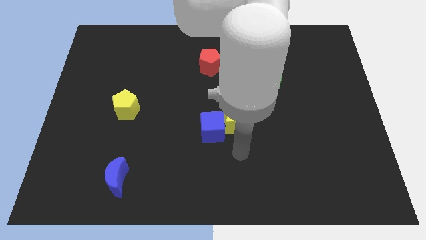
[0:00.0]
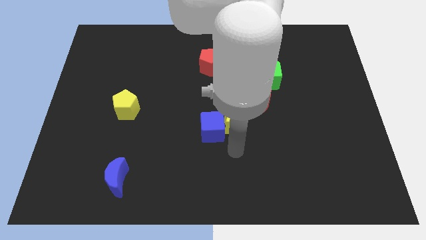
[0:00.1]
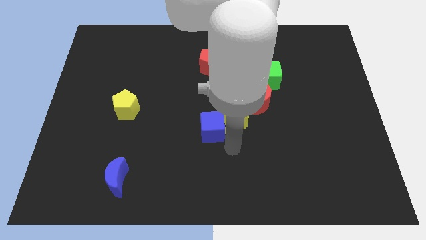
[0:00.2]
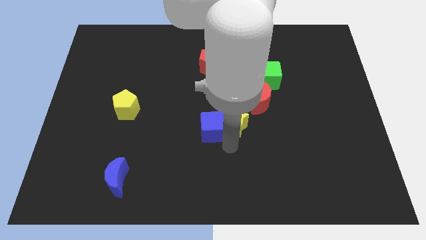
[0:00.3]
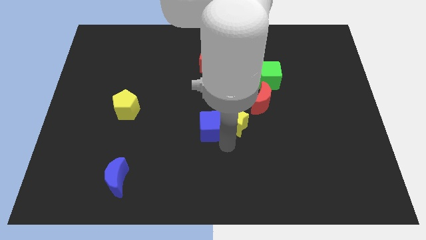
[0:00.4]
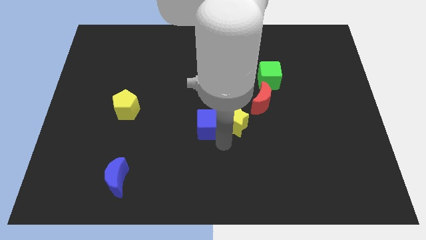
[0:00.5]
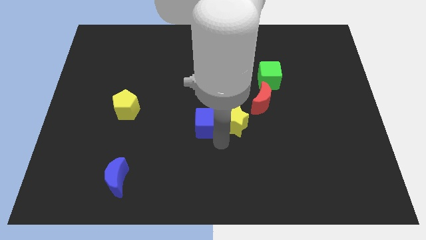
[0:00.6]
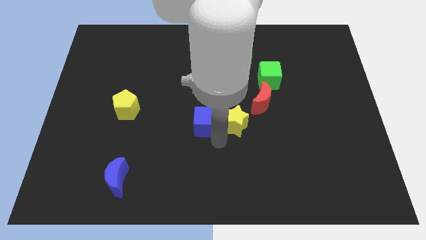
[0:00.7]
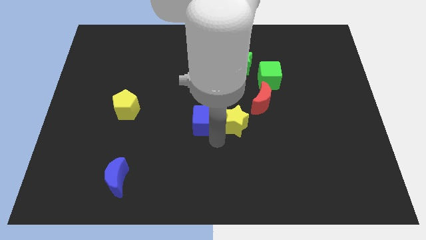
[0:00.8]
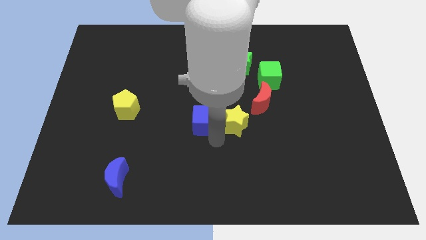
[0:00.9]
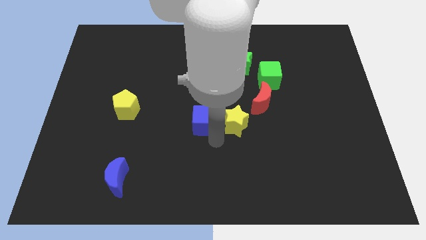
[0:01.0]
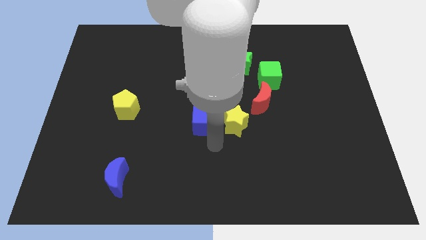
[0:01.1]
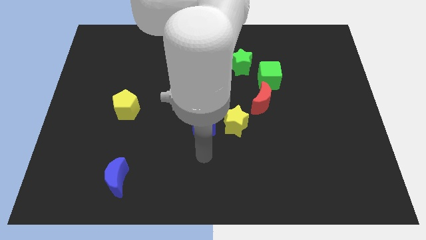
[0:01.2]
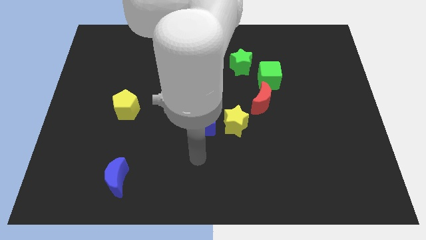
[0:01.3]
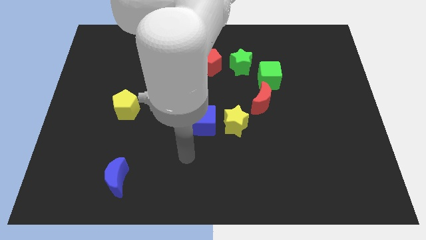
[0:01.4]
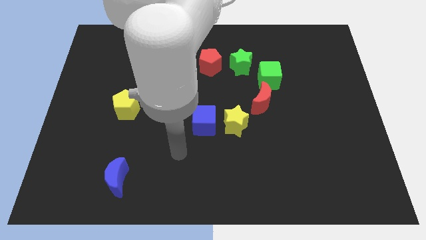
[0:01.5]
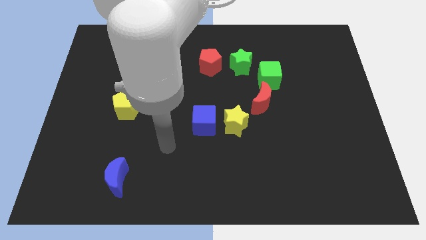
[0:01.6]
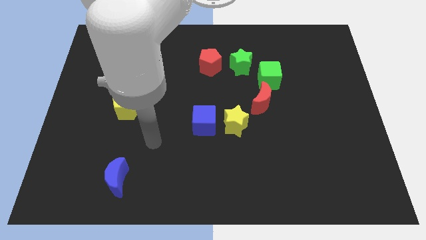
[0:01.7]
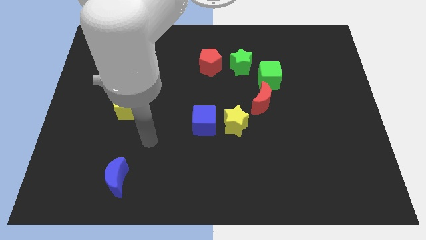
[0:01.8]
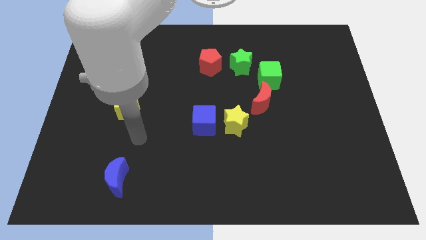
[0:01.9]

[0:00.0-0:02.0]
separate the blue cube and yellow star

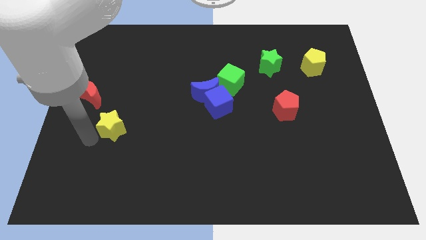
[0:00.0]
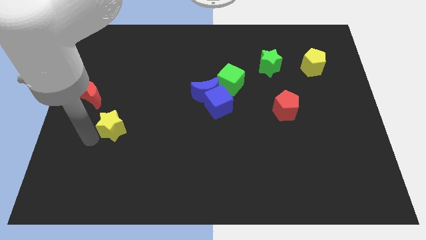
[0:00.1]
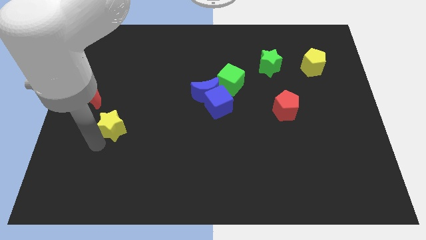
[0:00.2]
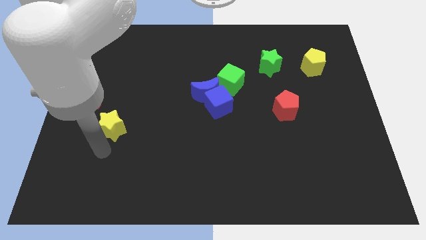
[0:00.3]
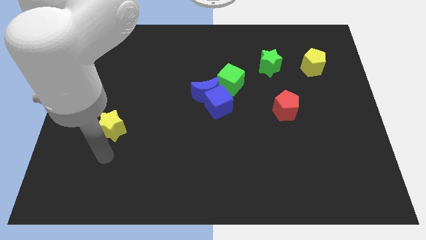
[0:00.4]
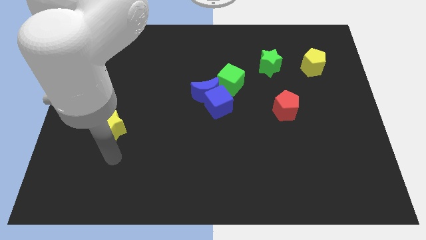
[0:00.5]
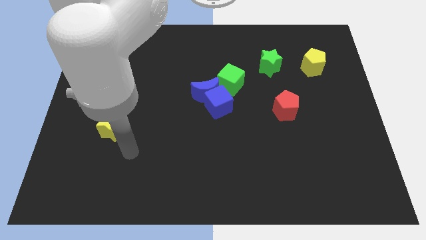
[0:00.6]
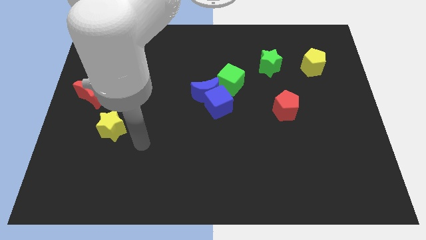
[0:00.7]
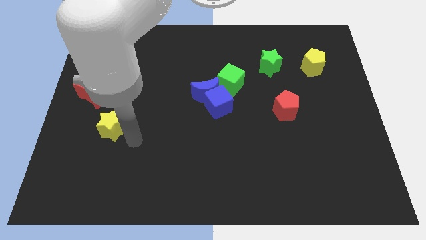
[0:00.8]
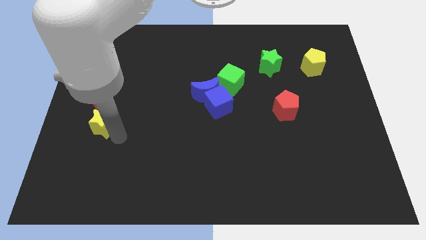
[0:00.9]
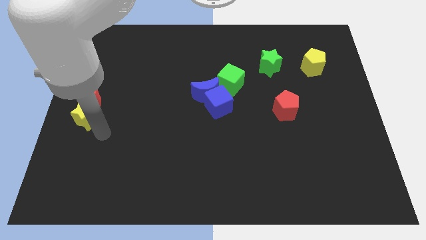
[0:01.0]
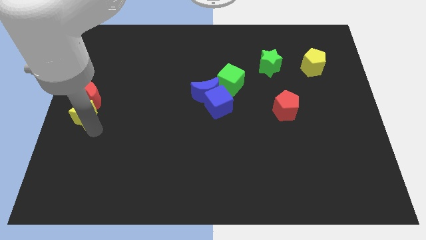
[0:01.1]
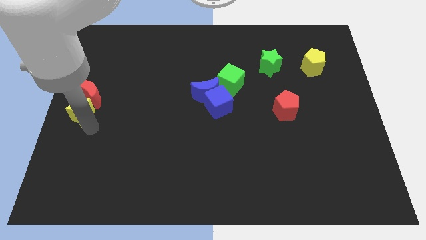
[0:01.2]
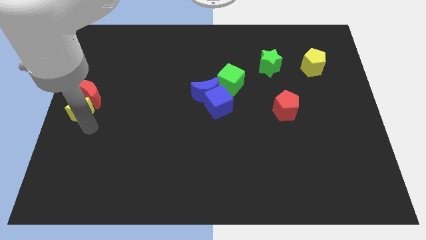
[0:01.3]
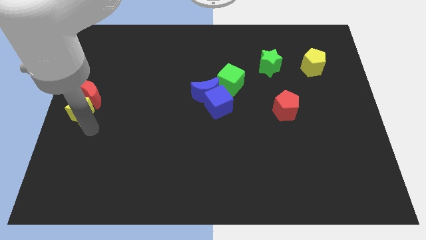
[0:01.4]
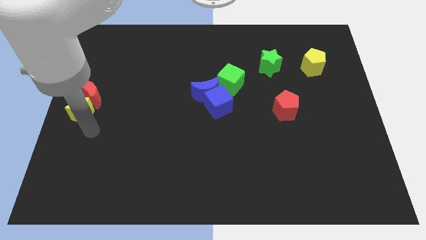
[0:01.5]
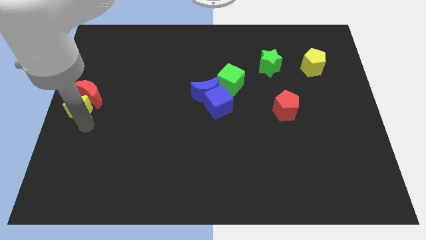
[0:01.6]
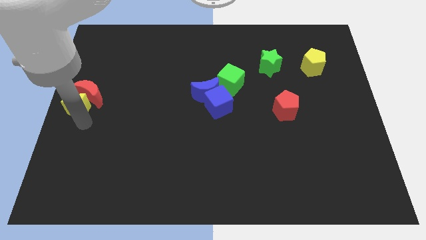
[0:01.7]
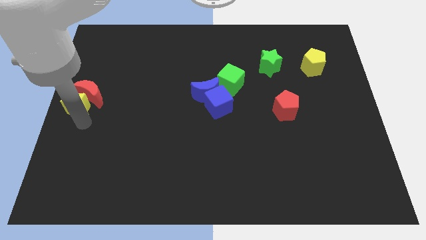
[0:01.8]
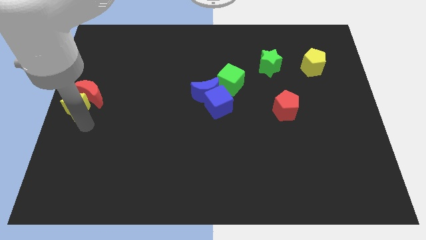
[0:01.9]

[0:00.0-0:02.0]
push the yellow star into red crescent

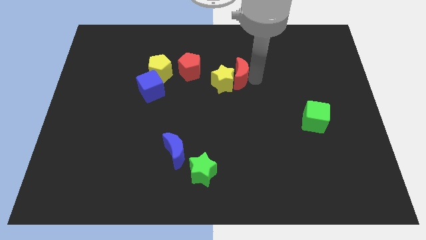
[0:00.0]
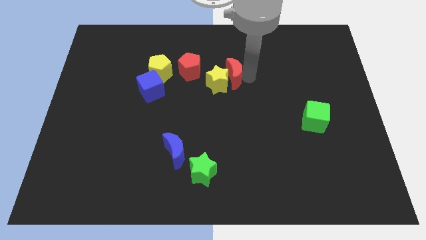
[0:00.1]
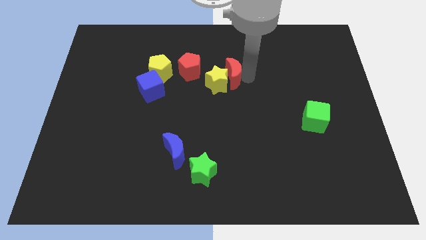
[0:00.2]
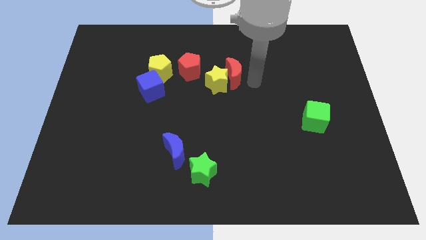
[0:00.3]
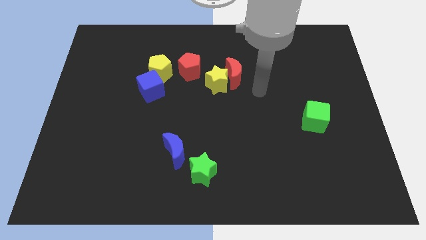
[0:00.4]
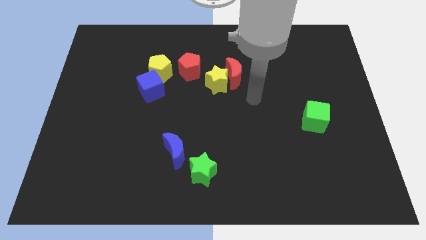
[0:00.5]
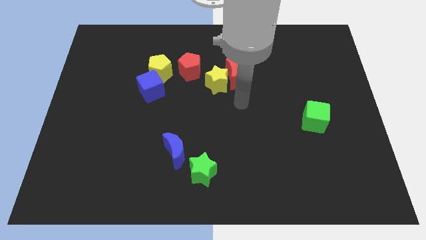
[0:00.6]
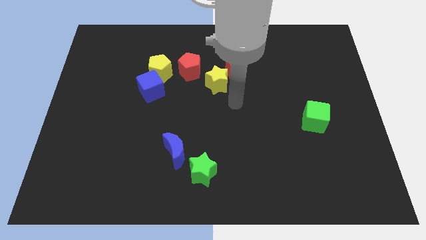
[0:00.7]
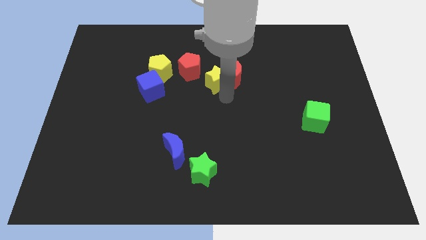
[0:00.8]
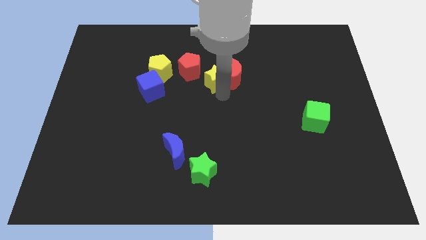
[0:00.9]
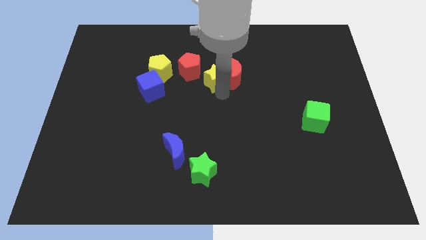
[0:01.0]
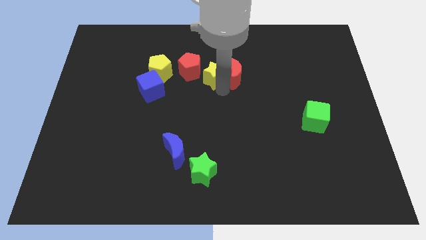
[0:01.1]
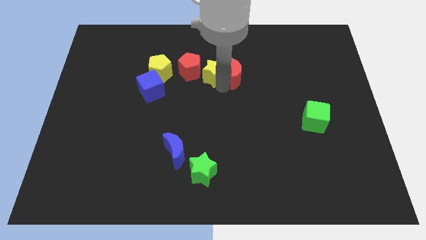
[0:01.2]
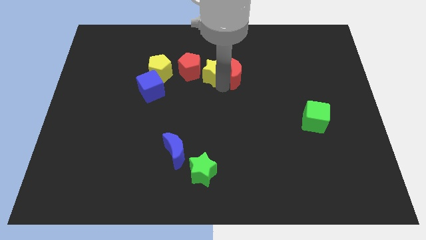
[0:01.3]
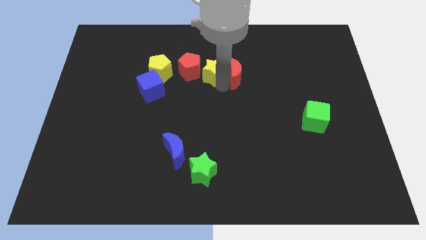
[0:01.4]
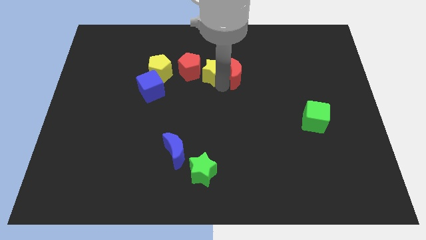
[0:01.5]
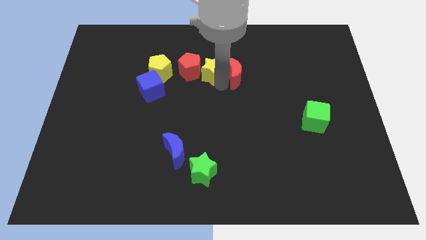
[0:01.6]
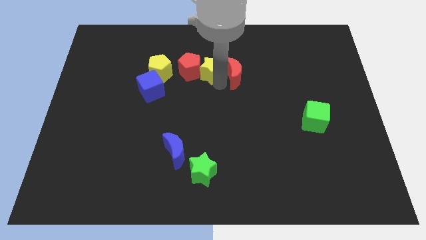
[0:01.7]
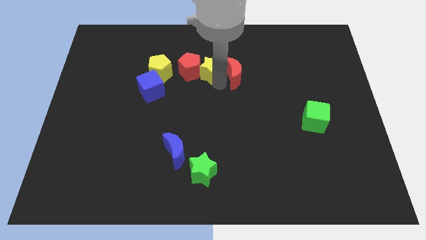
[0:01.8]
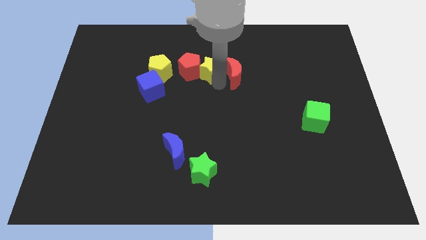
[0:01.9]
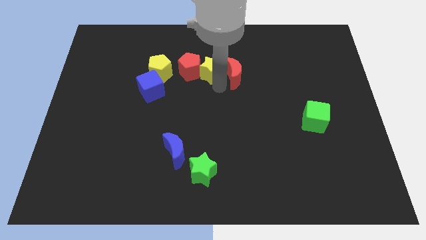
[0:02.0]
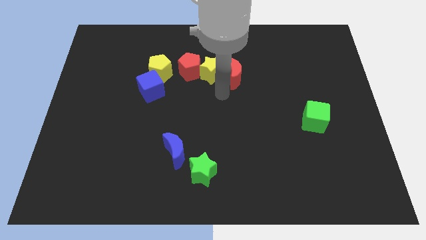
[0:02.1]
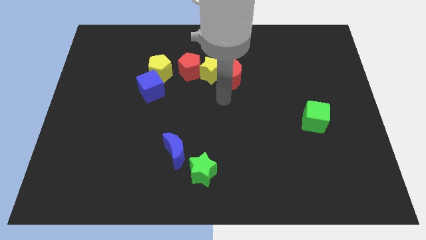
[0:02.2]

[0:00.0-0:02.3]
move the yellow star into the red pentagon

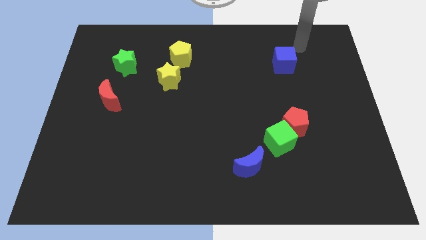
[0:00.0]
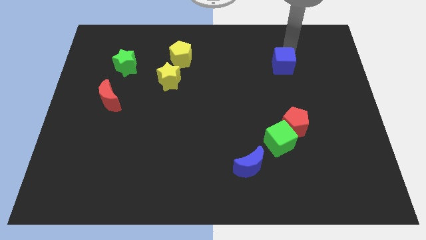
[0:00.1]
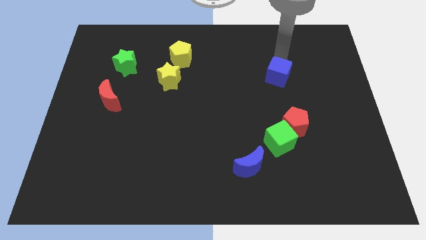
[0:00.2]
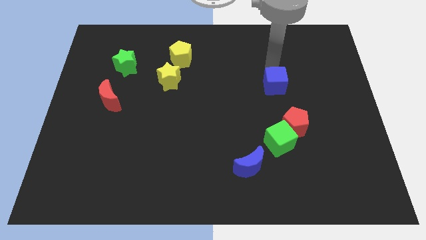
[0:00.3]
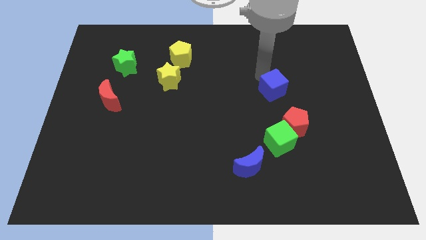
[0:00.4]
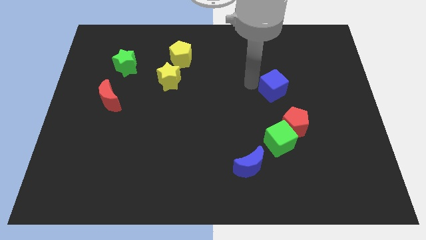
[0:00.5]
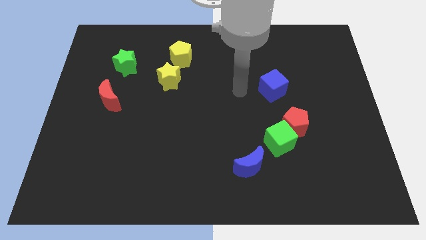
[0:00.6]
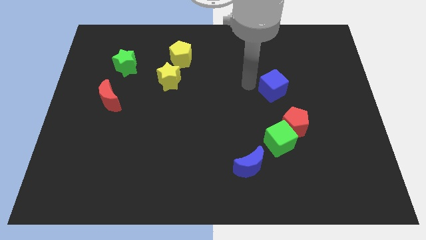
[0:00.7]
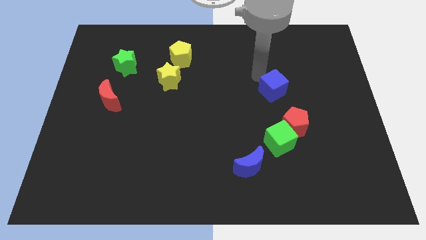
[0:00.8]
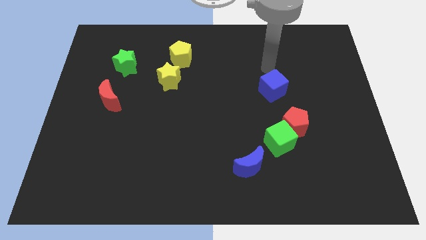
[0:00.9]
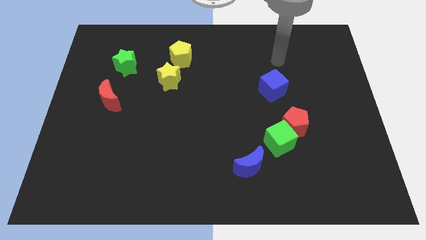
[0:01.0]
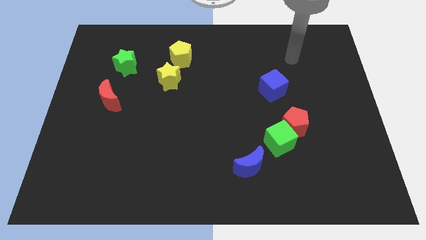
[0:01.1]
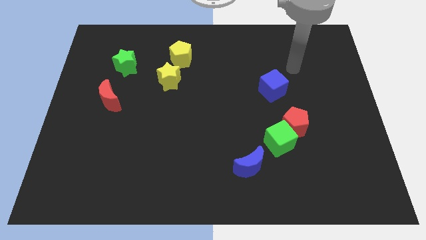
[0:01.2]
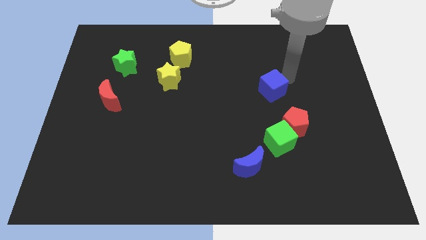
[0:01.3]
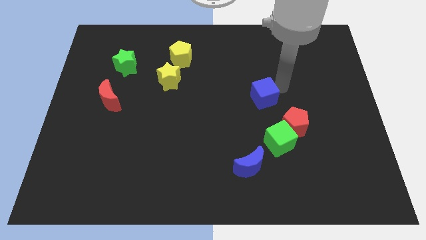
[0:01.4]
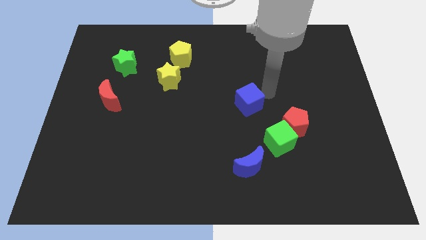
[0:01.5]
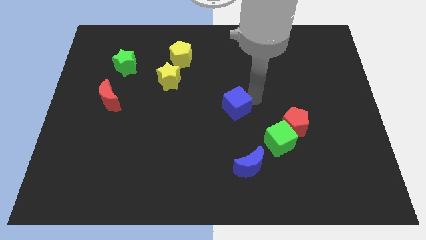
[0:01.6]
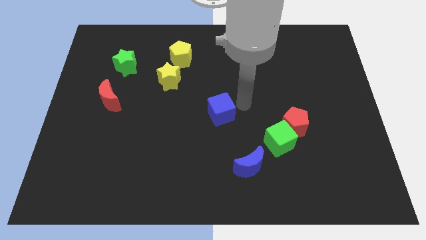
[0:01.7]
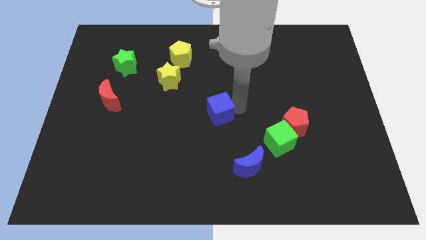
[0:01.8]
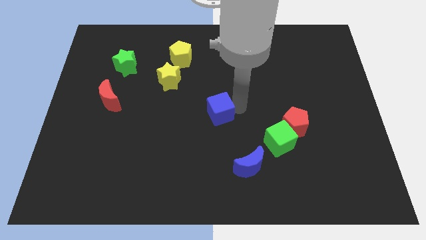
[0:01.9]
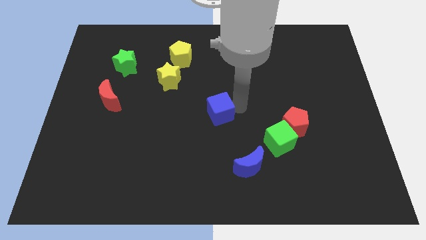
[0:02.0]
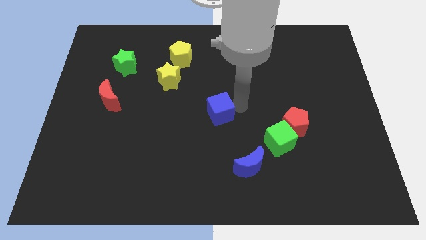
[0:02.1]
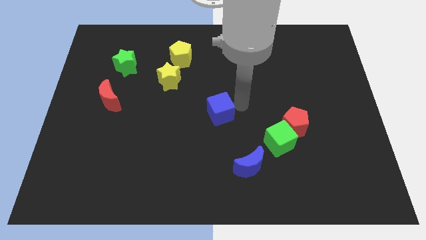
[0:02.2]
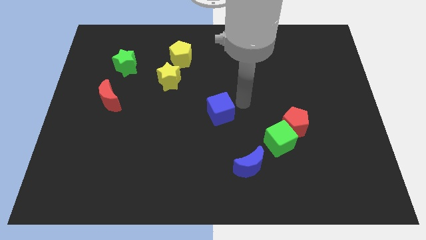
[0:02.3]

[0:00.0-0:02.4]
drag blue cube to the center of the board

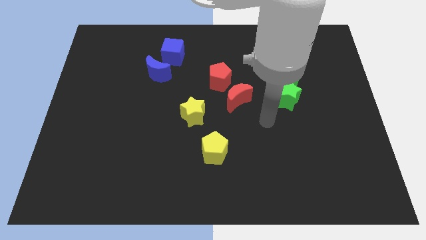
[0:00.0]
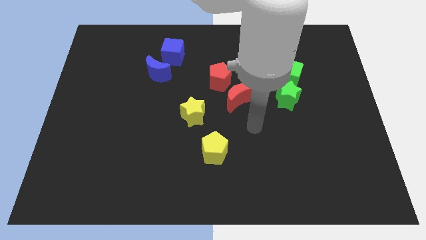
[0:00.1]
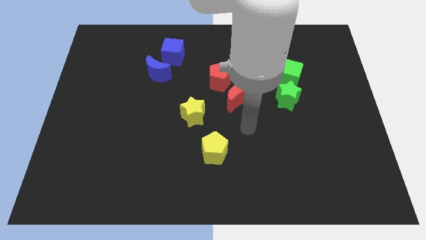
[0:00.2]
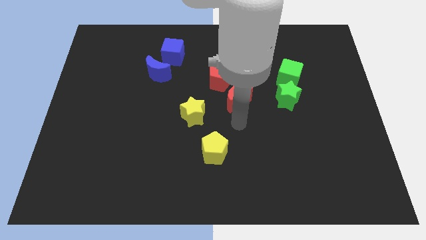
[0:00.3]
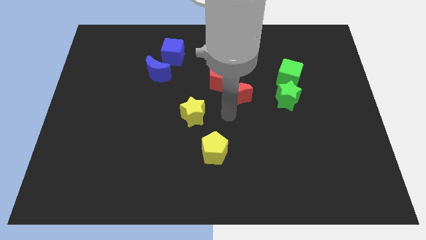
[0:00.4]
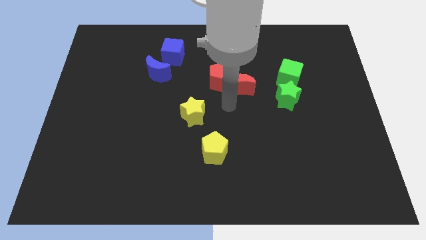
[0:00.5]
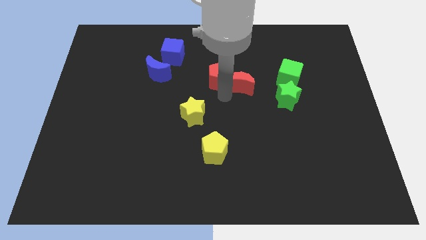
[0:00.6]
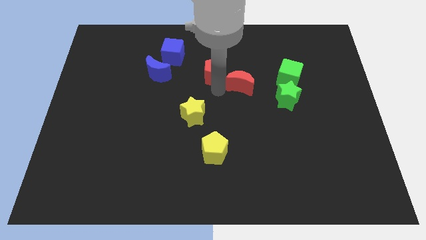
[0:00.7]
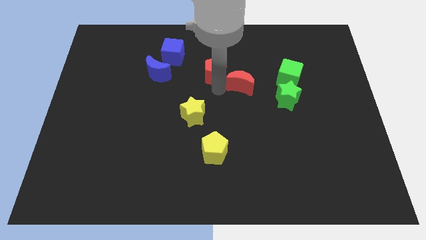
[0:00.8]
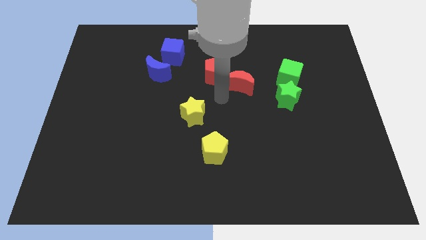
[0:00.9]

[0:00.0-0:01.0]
push the red moon upwards slightly
